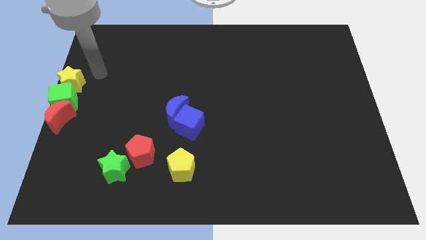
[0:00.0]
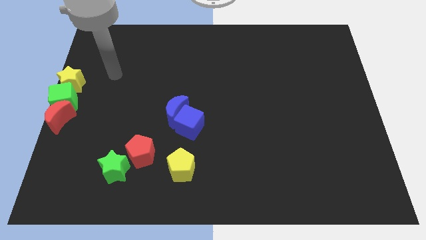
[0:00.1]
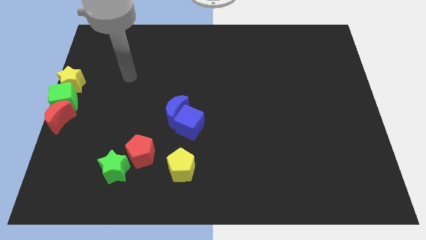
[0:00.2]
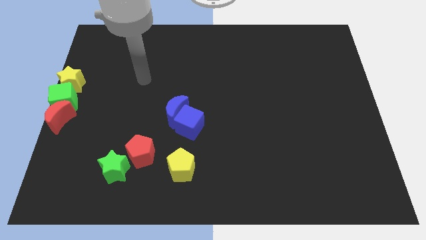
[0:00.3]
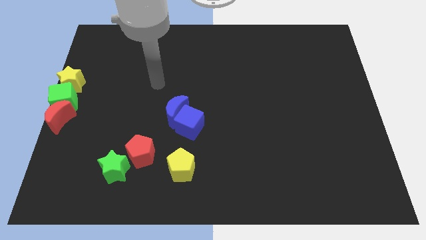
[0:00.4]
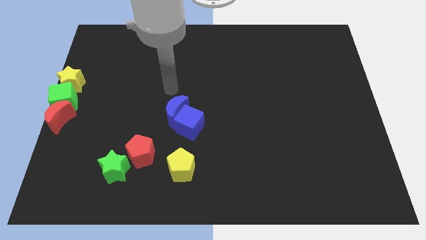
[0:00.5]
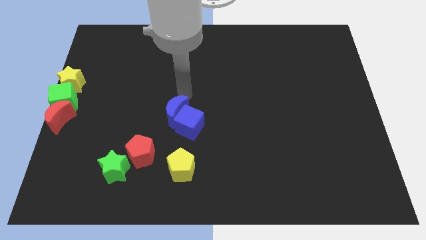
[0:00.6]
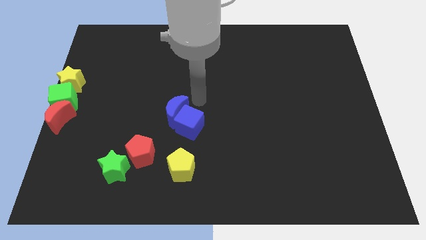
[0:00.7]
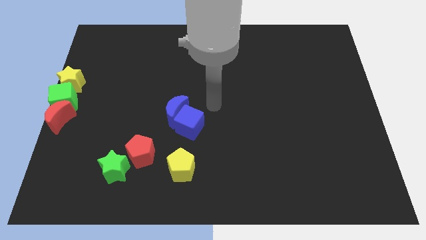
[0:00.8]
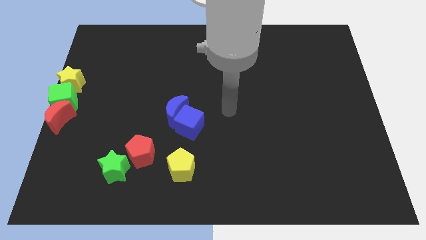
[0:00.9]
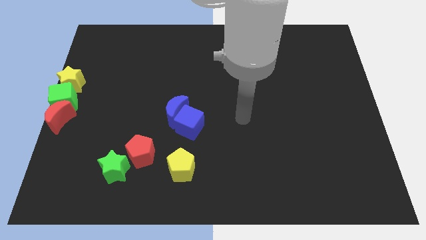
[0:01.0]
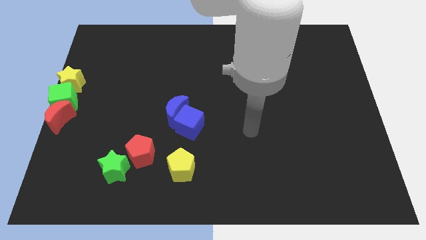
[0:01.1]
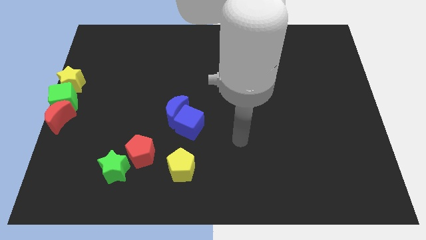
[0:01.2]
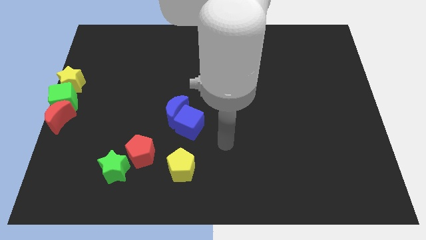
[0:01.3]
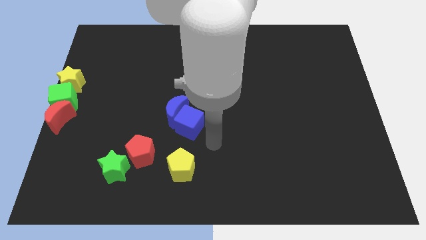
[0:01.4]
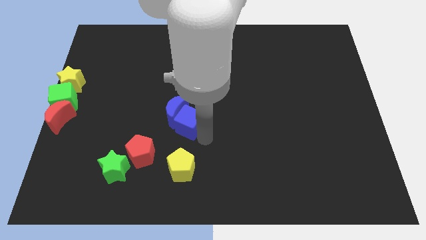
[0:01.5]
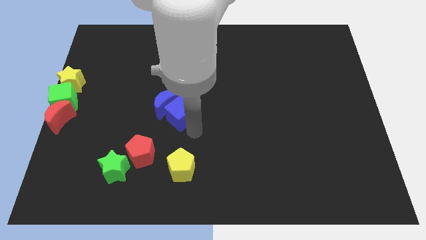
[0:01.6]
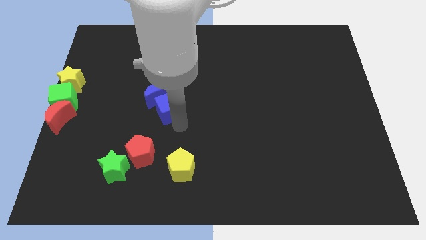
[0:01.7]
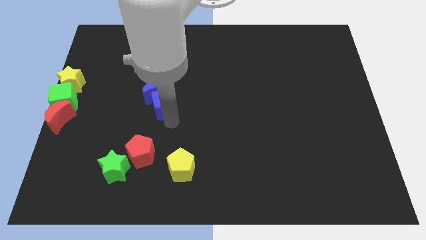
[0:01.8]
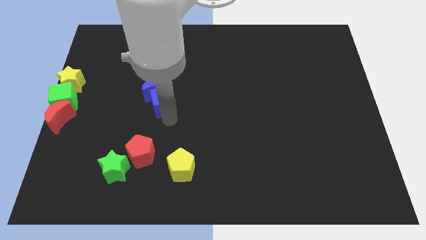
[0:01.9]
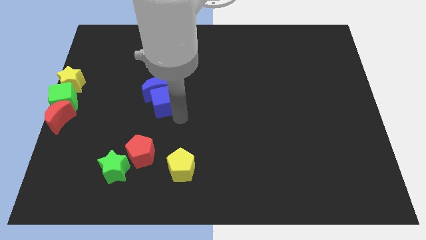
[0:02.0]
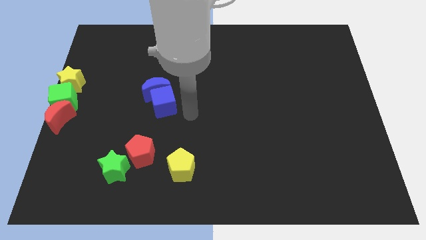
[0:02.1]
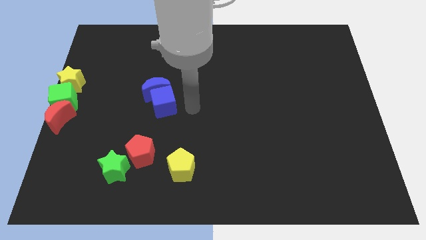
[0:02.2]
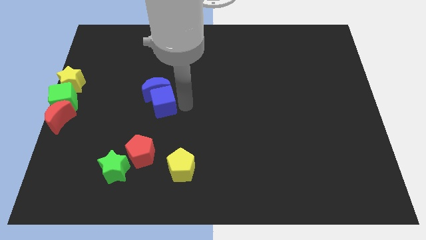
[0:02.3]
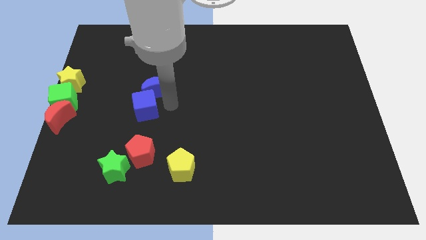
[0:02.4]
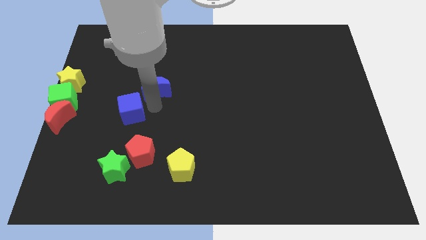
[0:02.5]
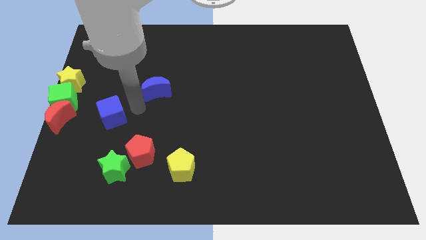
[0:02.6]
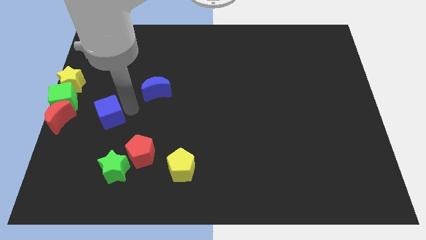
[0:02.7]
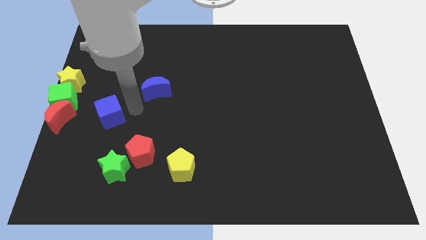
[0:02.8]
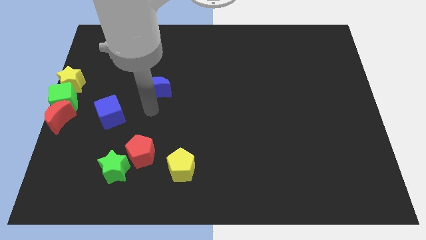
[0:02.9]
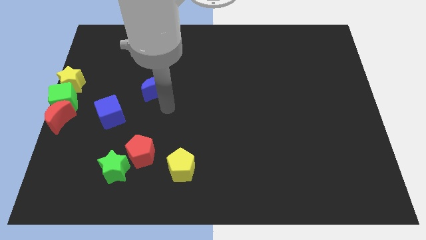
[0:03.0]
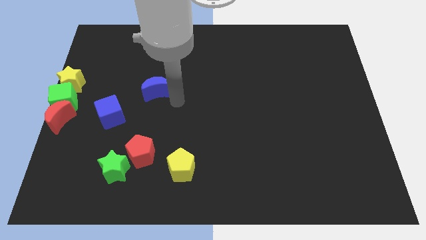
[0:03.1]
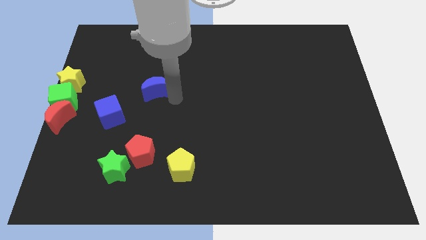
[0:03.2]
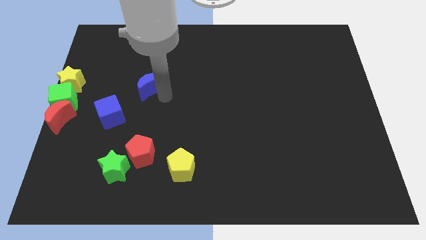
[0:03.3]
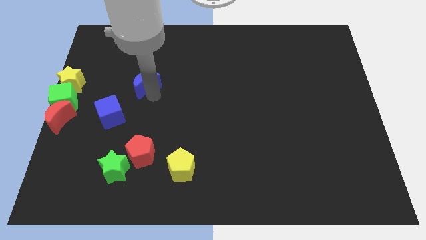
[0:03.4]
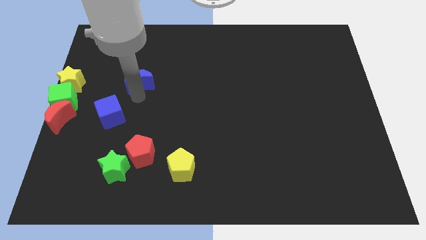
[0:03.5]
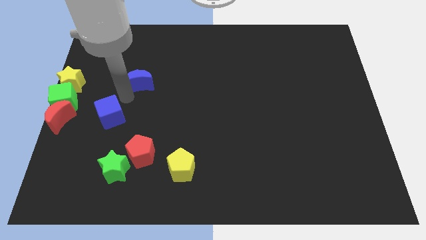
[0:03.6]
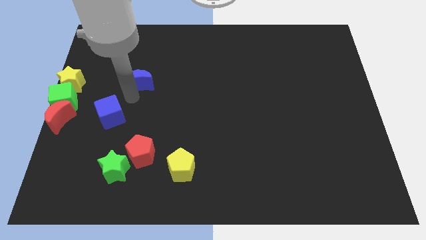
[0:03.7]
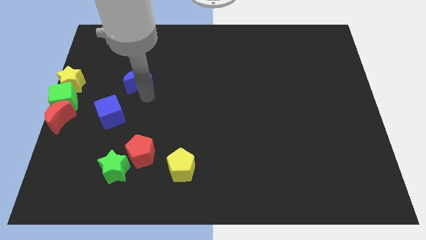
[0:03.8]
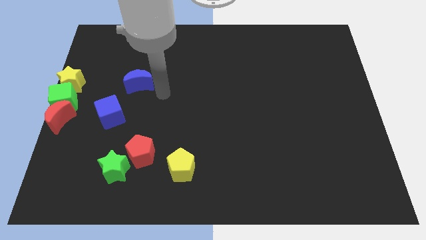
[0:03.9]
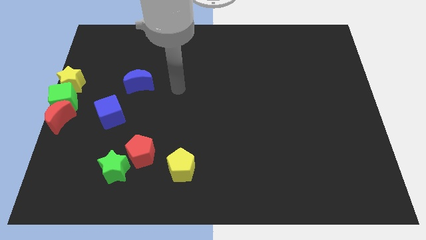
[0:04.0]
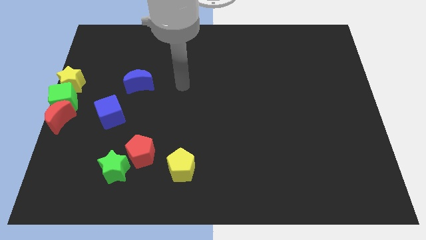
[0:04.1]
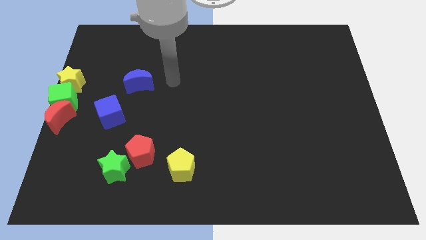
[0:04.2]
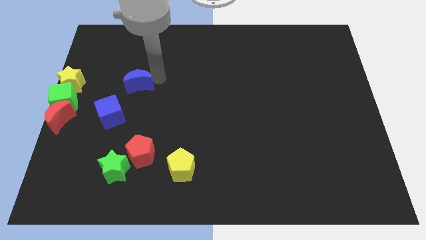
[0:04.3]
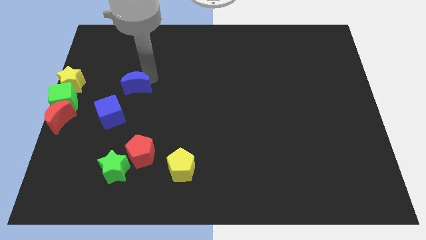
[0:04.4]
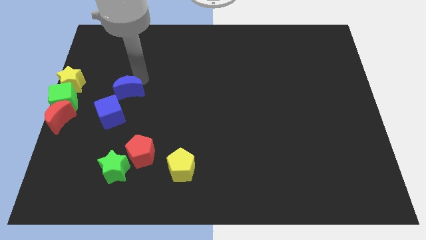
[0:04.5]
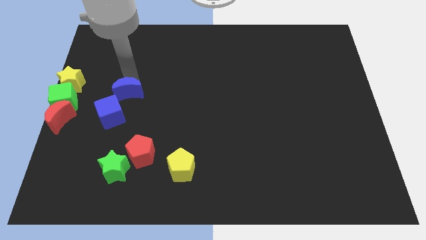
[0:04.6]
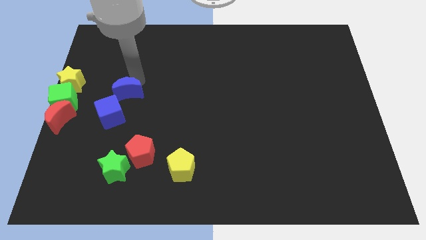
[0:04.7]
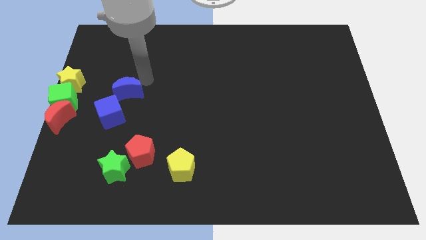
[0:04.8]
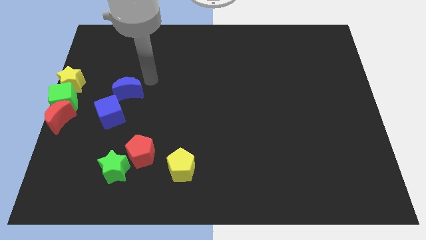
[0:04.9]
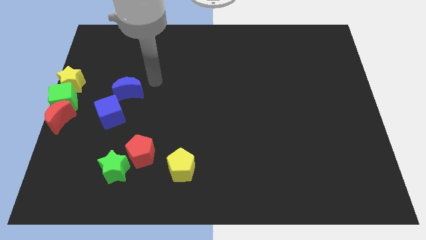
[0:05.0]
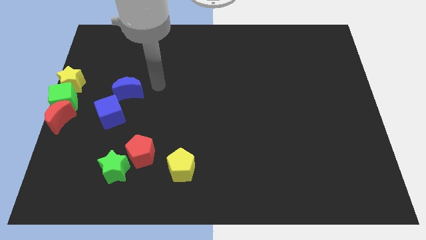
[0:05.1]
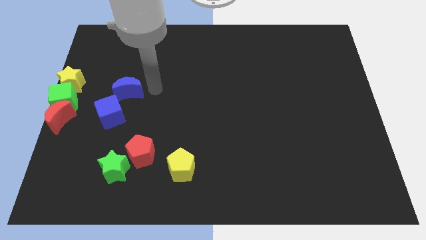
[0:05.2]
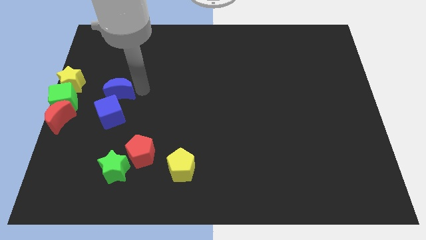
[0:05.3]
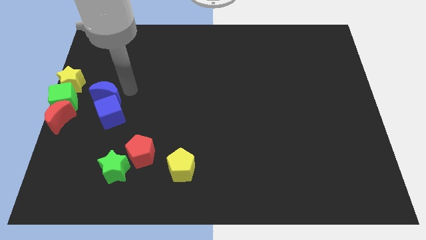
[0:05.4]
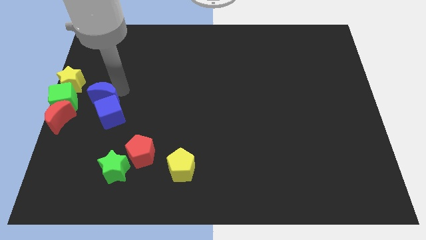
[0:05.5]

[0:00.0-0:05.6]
place the blue things at the right side of the vertical line of blocks

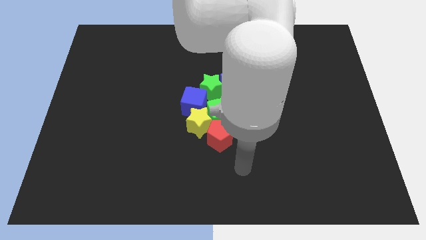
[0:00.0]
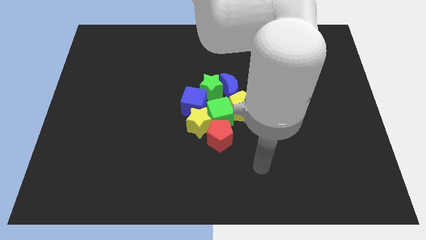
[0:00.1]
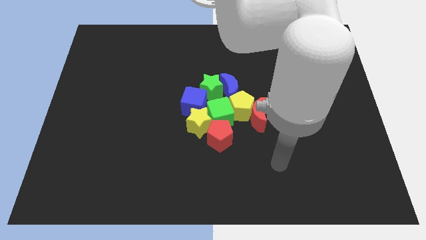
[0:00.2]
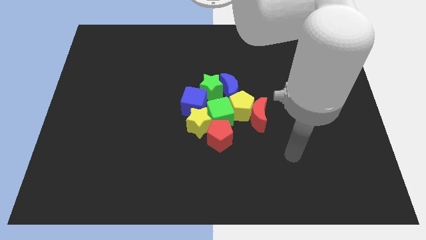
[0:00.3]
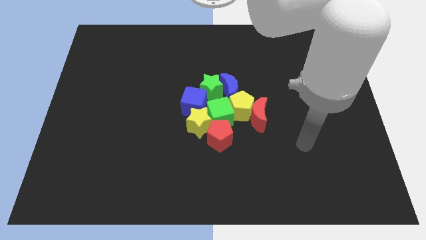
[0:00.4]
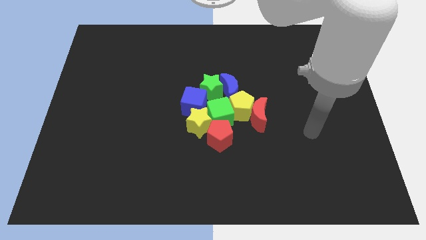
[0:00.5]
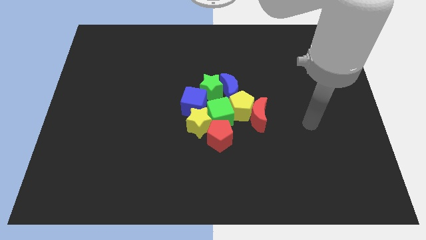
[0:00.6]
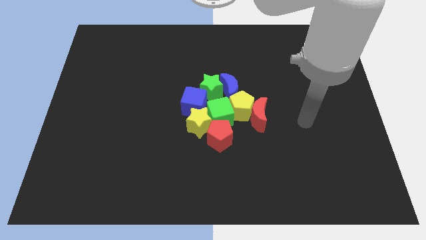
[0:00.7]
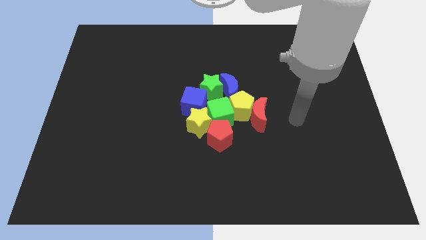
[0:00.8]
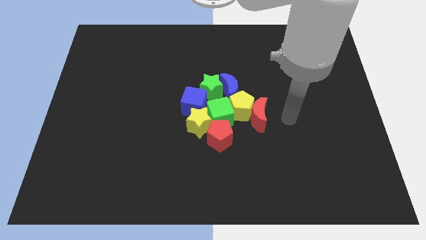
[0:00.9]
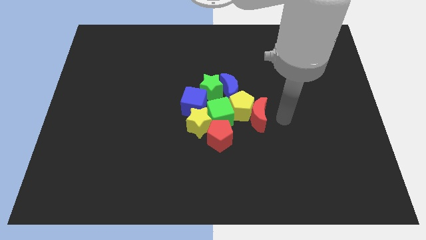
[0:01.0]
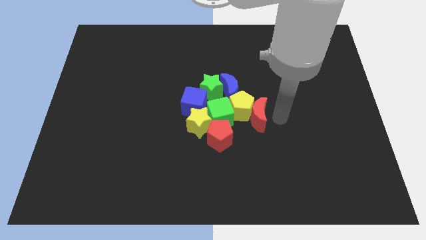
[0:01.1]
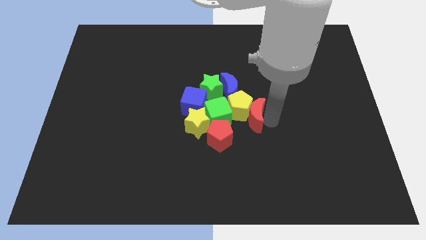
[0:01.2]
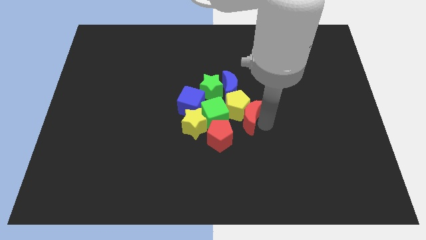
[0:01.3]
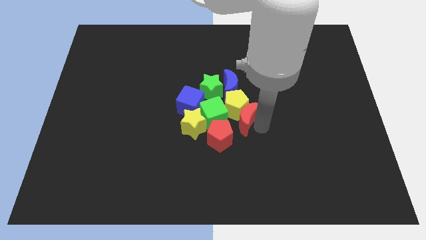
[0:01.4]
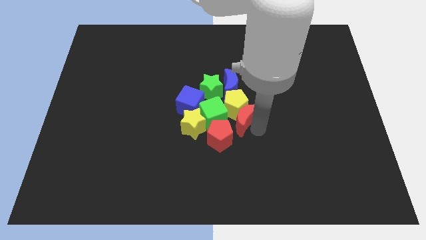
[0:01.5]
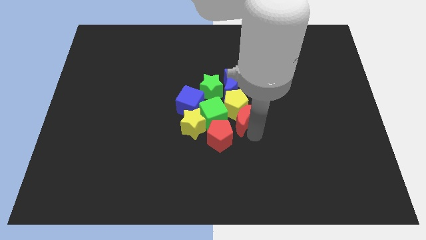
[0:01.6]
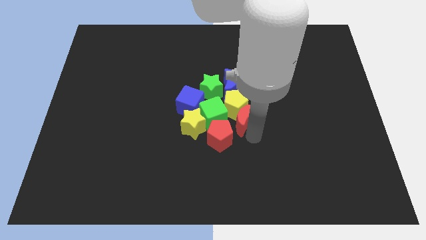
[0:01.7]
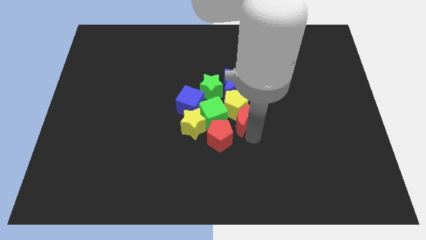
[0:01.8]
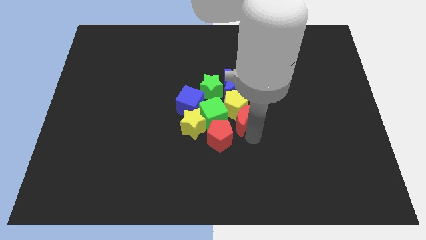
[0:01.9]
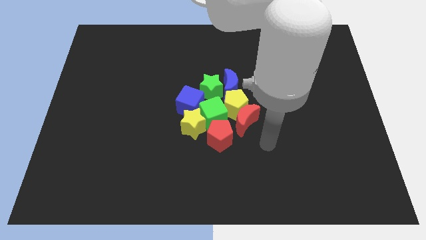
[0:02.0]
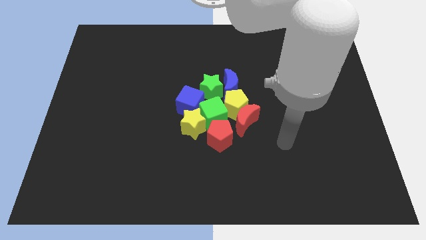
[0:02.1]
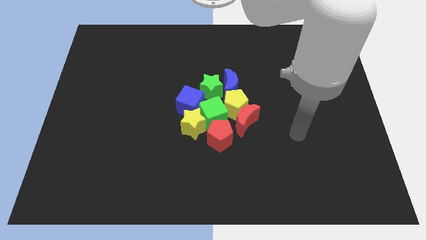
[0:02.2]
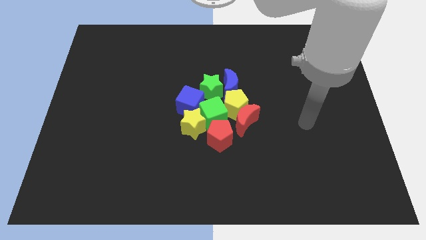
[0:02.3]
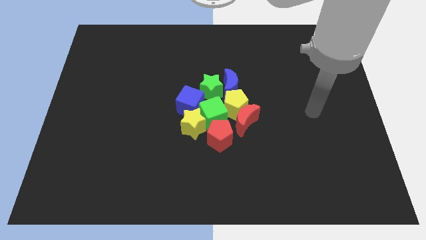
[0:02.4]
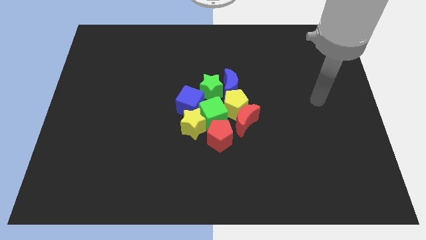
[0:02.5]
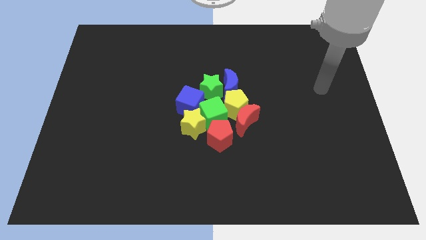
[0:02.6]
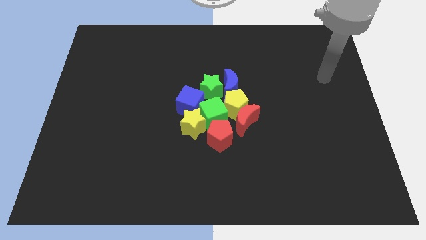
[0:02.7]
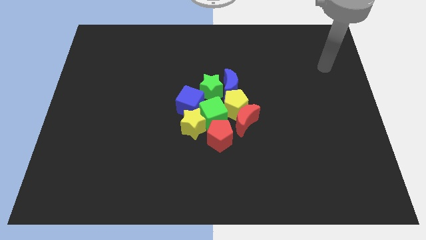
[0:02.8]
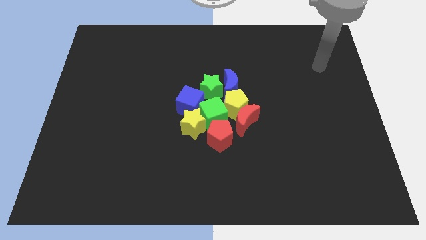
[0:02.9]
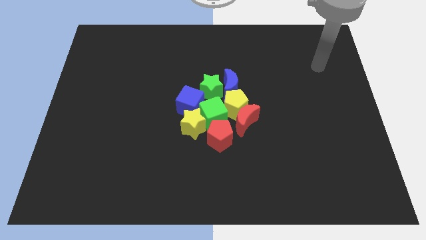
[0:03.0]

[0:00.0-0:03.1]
move the red crescent to the right of the red pentagon

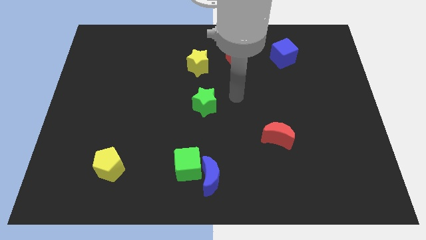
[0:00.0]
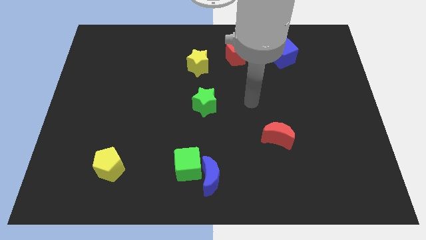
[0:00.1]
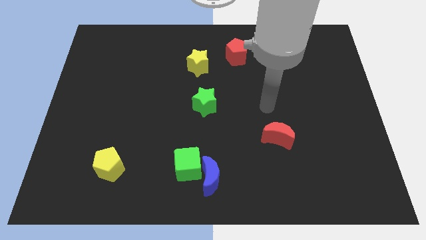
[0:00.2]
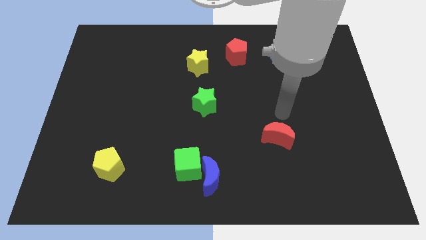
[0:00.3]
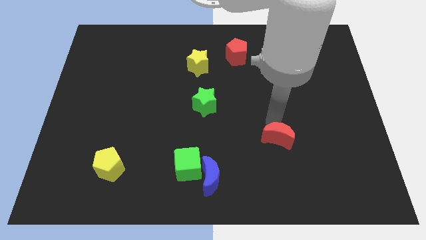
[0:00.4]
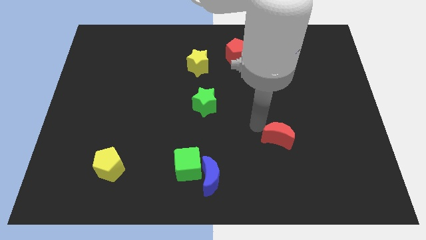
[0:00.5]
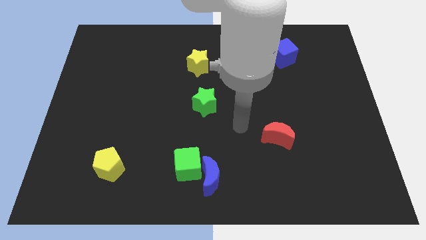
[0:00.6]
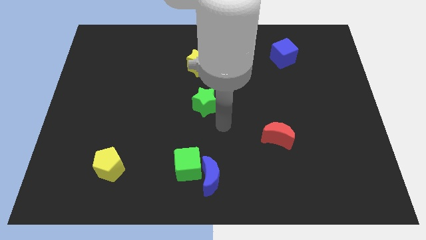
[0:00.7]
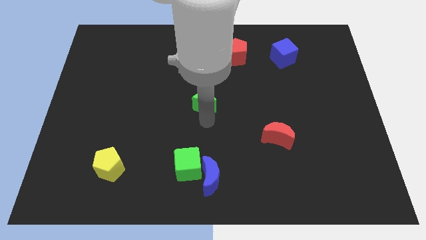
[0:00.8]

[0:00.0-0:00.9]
point your arm at the bottom of green star
